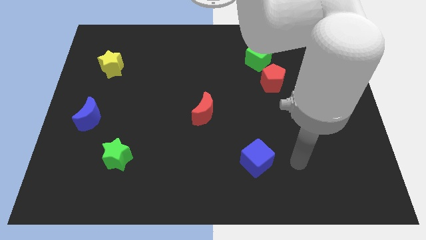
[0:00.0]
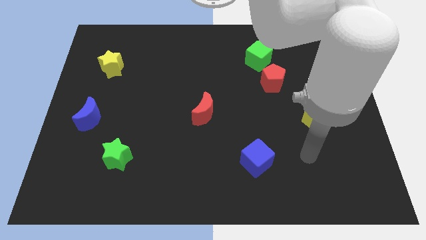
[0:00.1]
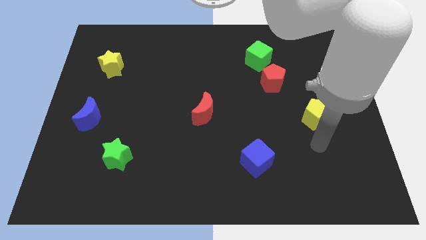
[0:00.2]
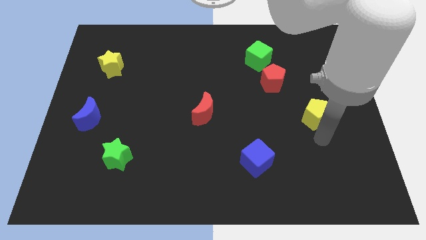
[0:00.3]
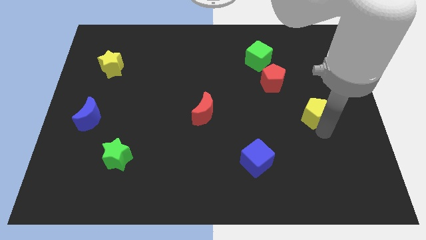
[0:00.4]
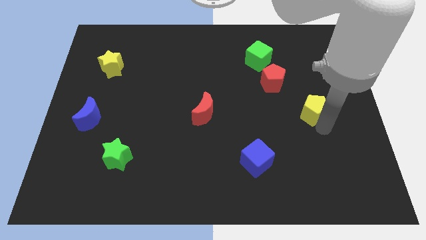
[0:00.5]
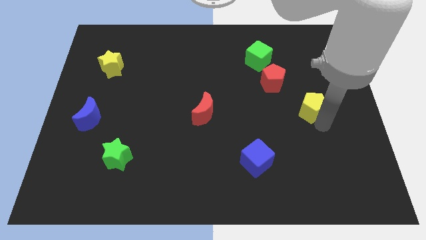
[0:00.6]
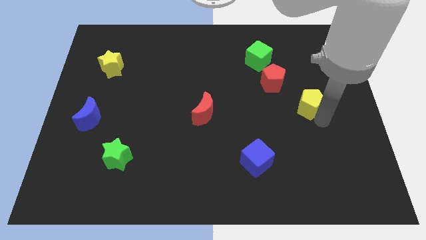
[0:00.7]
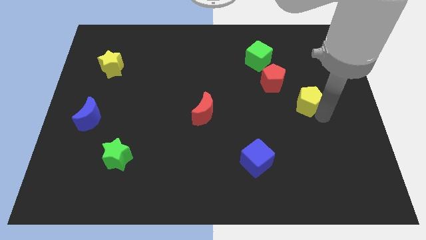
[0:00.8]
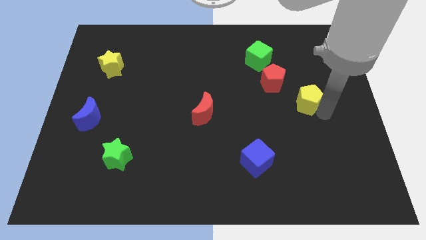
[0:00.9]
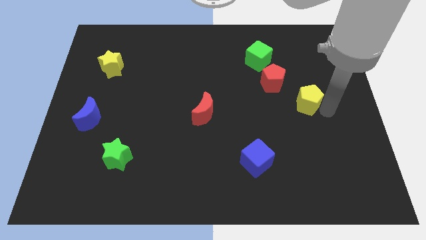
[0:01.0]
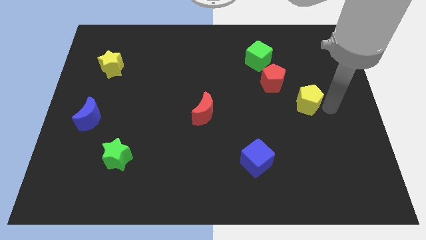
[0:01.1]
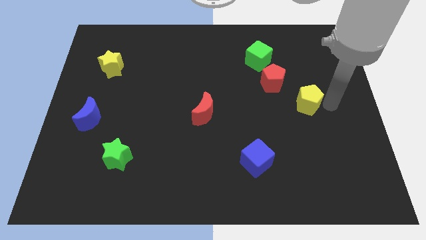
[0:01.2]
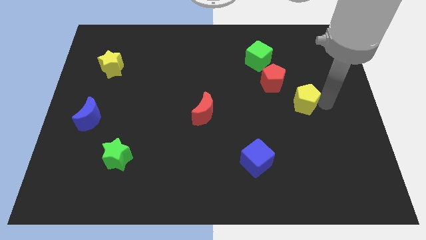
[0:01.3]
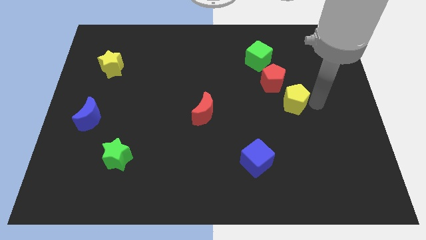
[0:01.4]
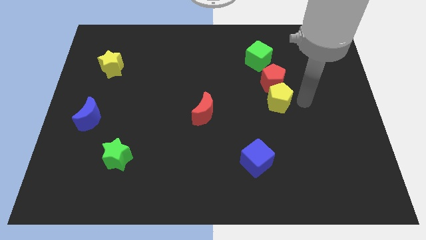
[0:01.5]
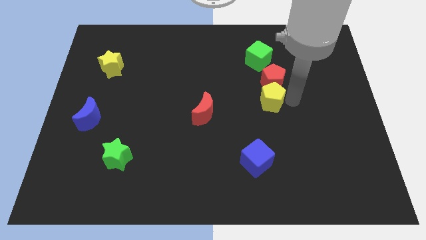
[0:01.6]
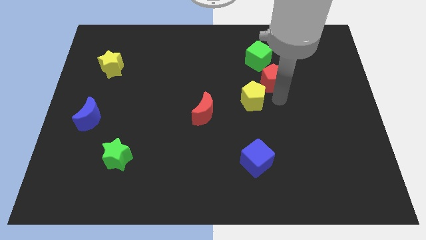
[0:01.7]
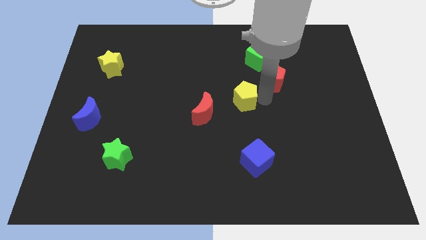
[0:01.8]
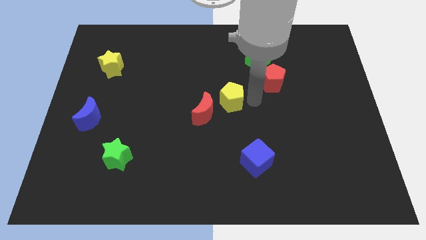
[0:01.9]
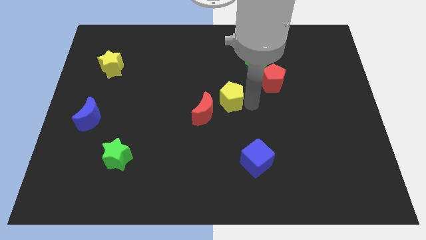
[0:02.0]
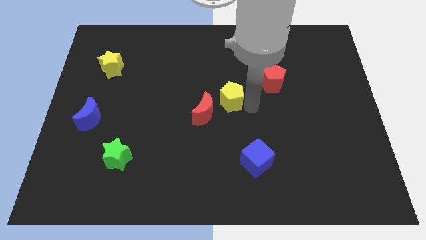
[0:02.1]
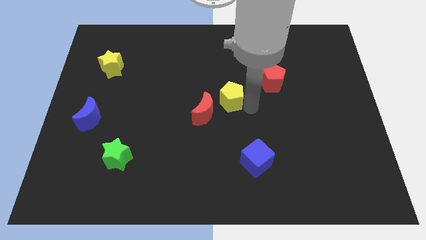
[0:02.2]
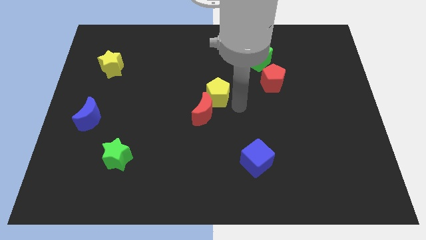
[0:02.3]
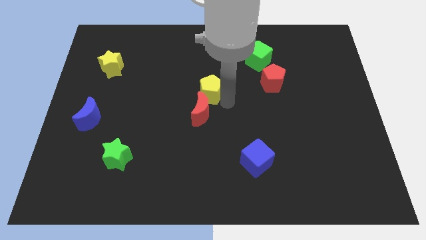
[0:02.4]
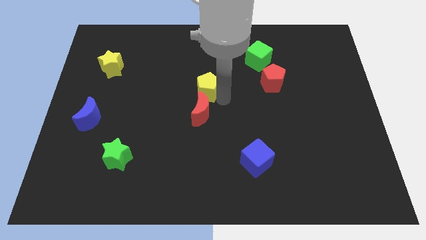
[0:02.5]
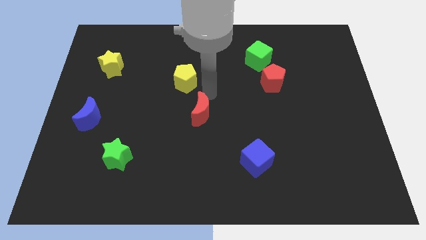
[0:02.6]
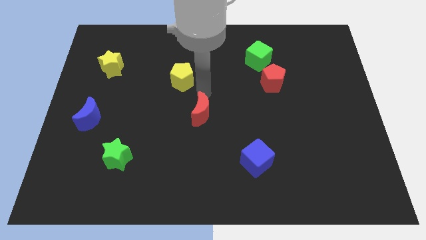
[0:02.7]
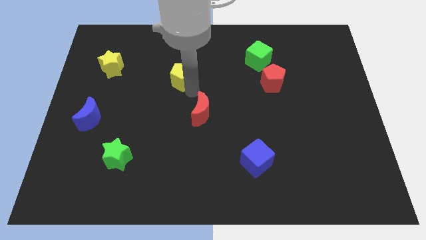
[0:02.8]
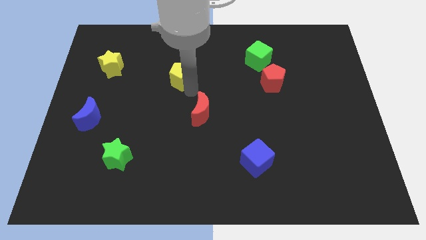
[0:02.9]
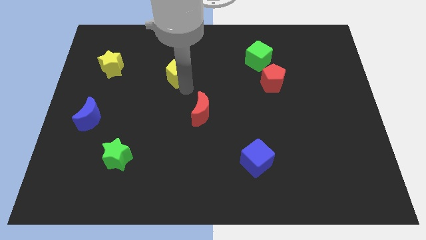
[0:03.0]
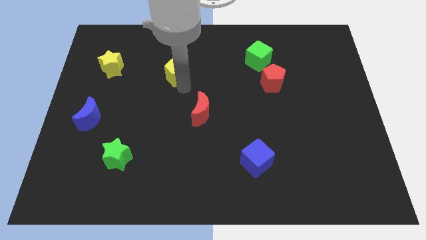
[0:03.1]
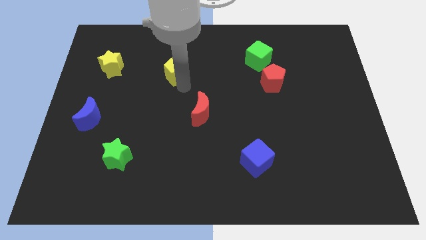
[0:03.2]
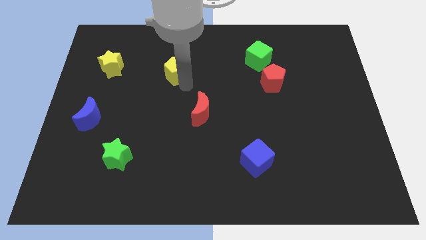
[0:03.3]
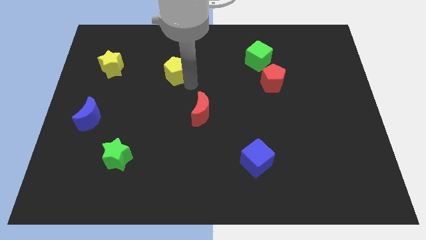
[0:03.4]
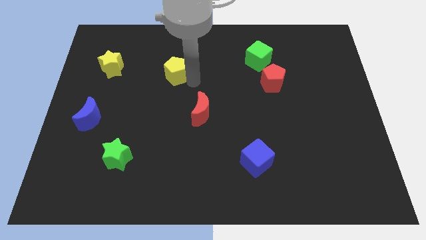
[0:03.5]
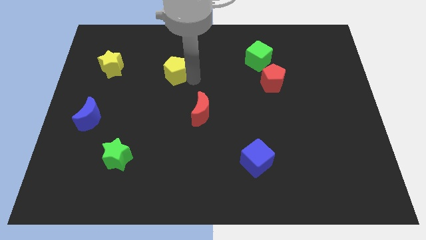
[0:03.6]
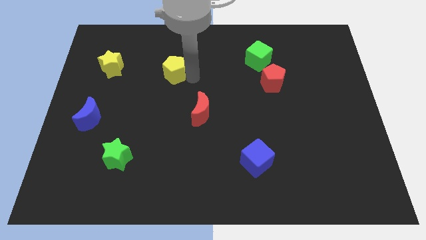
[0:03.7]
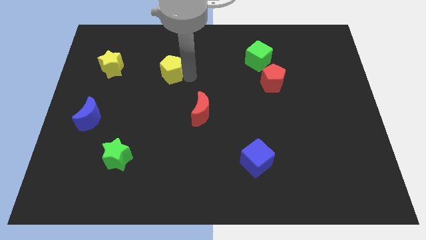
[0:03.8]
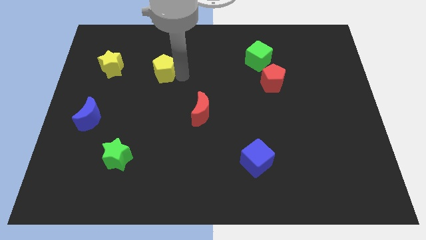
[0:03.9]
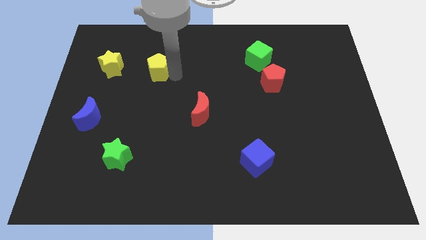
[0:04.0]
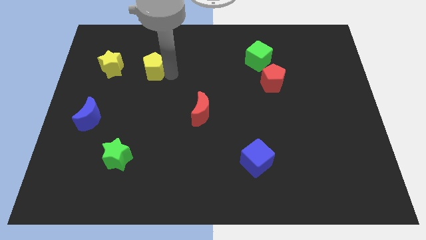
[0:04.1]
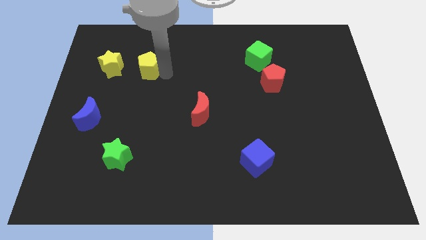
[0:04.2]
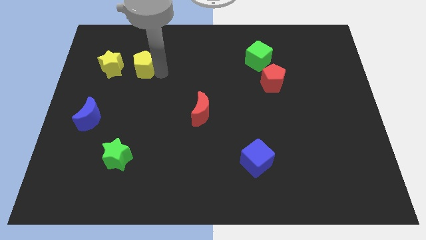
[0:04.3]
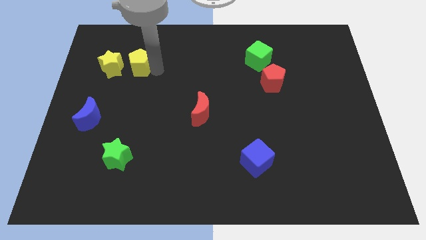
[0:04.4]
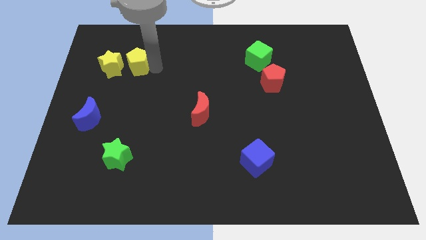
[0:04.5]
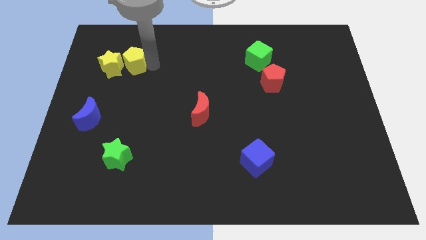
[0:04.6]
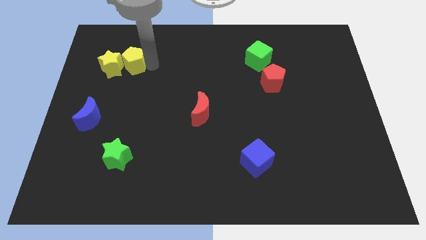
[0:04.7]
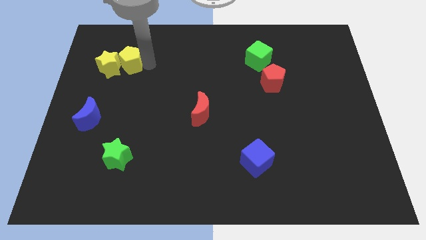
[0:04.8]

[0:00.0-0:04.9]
push the yellow pentagon towards the yellow star

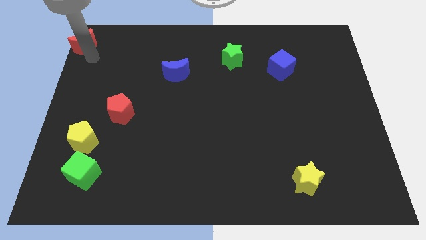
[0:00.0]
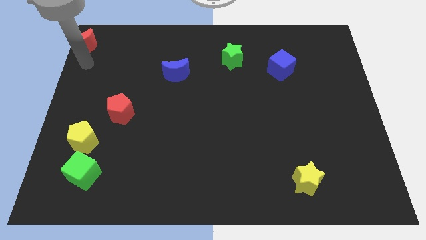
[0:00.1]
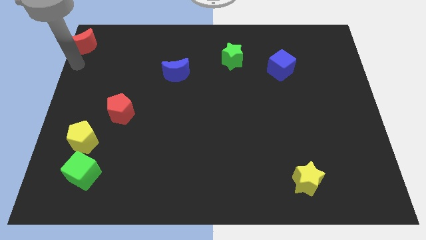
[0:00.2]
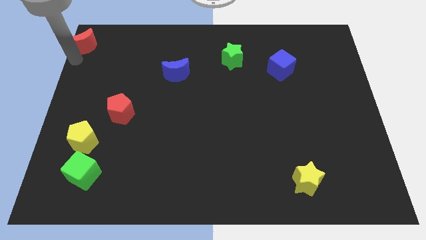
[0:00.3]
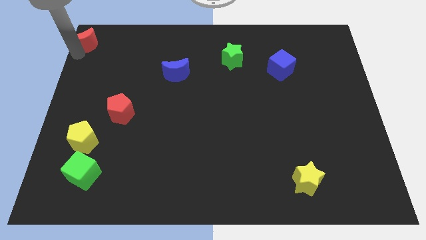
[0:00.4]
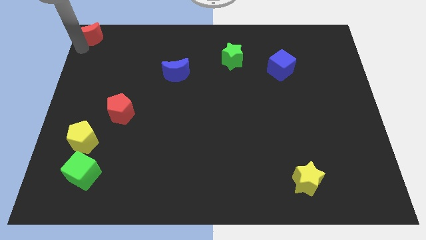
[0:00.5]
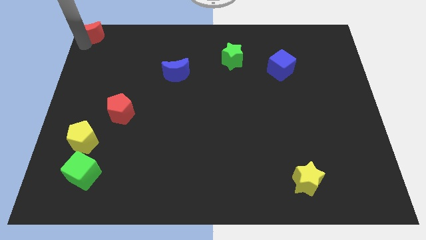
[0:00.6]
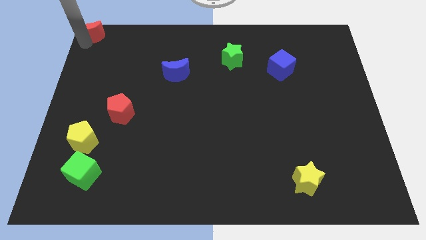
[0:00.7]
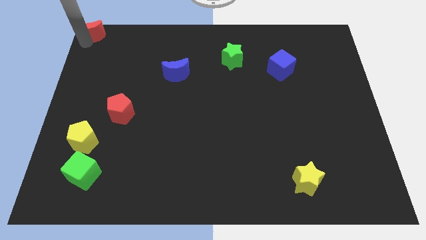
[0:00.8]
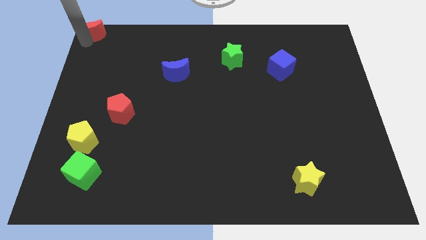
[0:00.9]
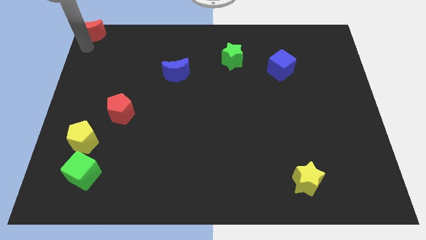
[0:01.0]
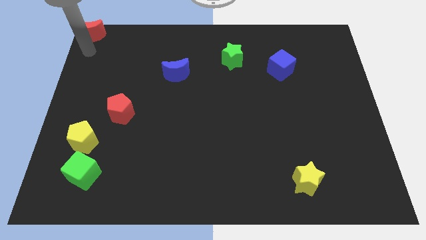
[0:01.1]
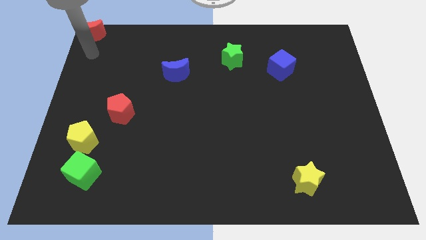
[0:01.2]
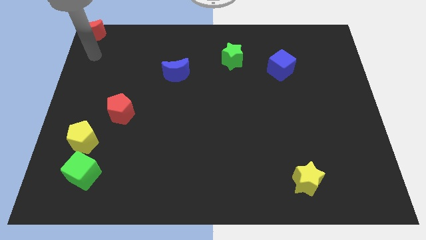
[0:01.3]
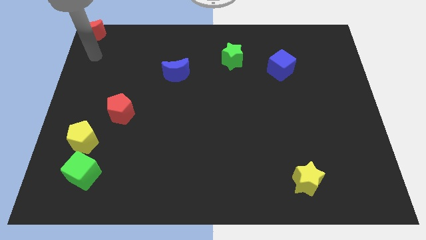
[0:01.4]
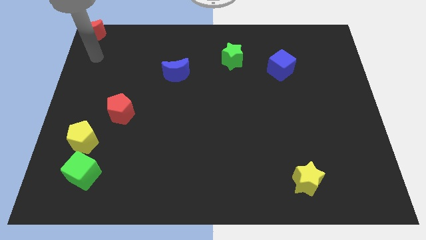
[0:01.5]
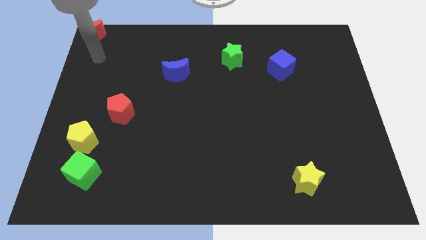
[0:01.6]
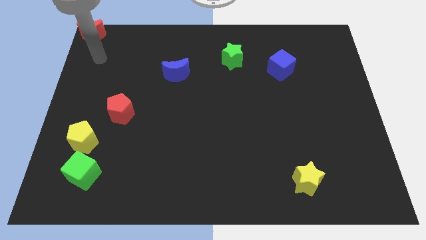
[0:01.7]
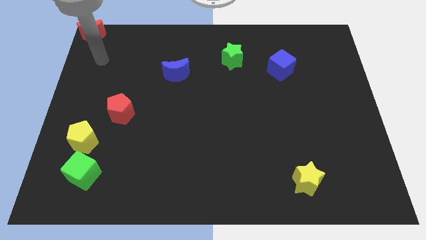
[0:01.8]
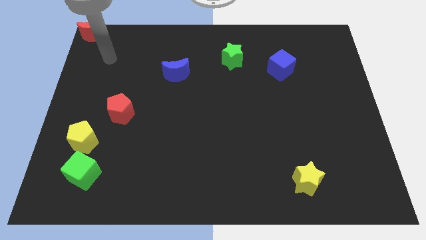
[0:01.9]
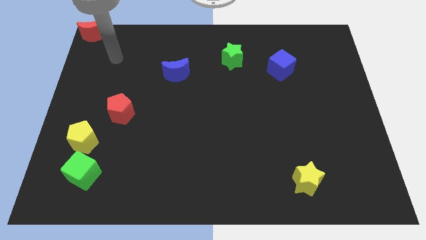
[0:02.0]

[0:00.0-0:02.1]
place red crescent to the top left corner

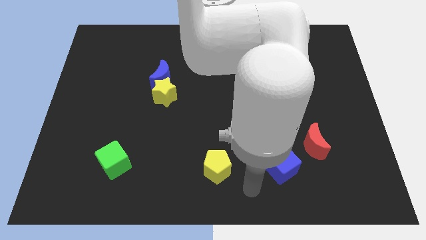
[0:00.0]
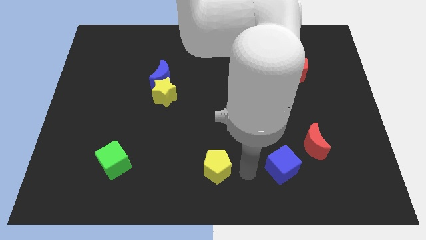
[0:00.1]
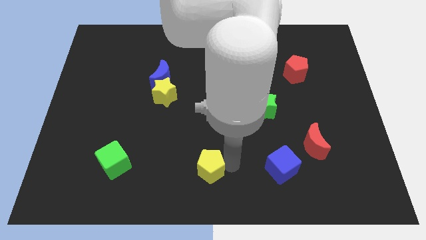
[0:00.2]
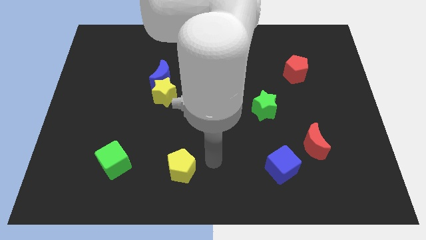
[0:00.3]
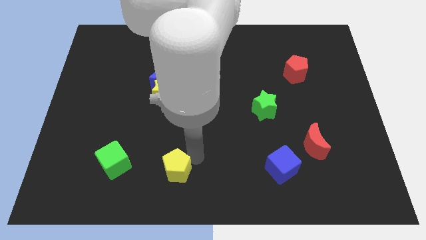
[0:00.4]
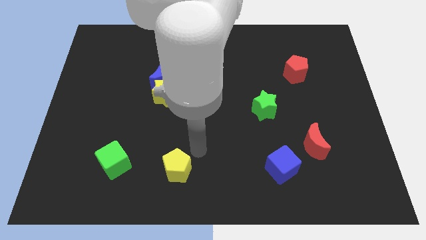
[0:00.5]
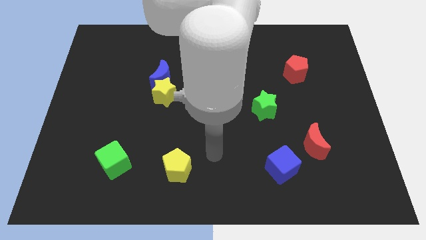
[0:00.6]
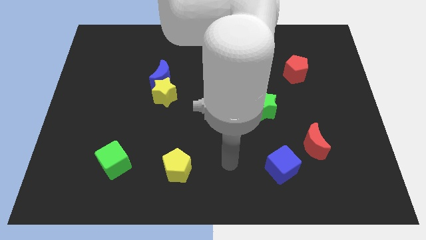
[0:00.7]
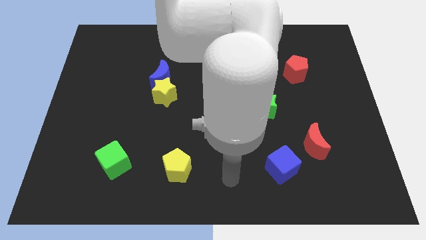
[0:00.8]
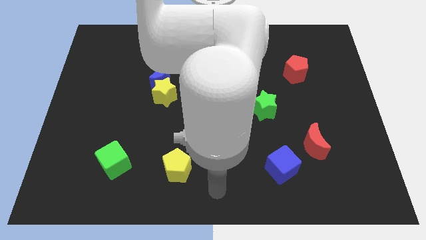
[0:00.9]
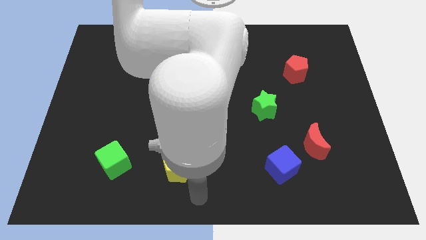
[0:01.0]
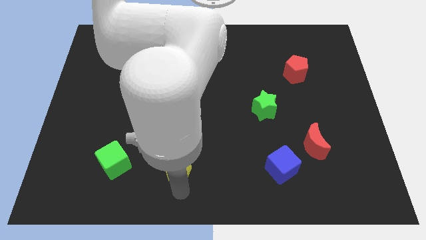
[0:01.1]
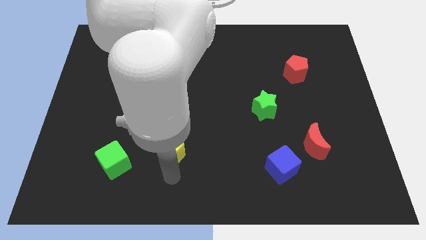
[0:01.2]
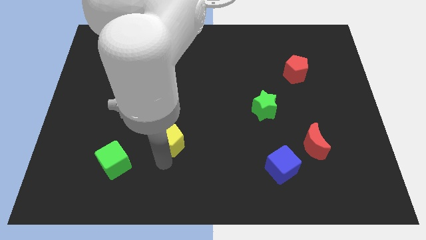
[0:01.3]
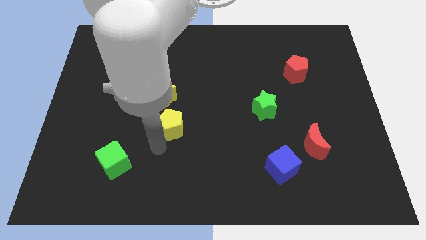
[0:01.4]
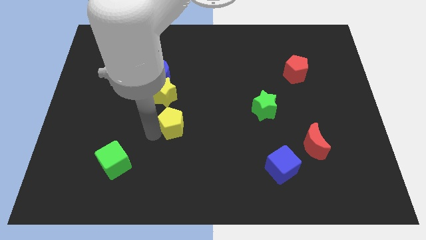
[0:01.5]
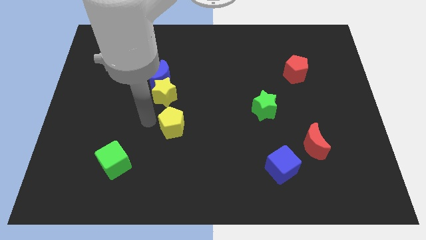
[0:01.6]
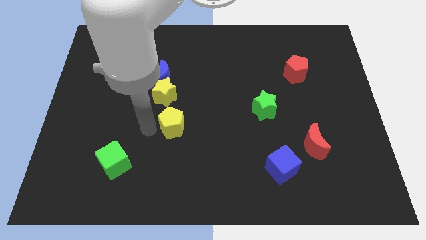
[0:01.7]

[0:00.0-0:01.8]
push yellow pentagon below the yellow star

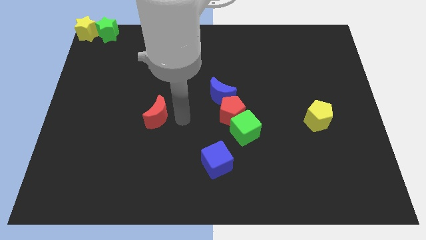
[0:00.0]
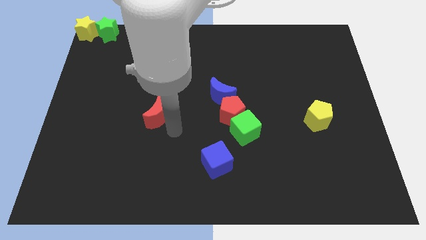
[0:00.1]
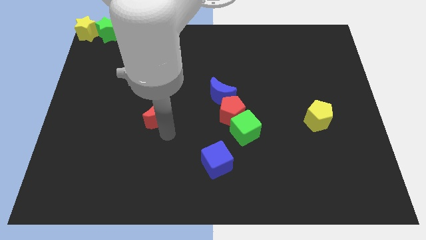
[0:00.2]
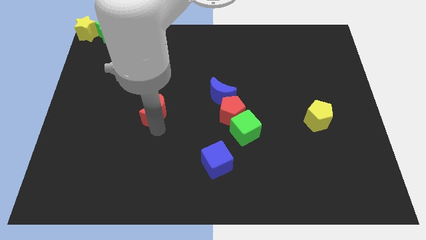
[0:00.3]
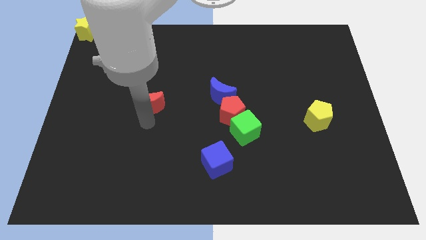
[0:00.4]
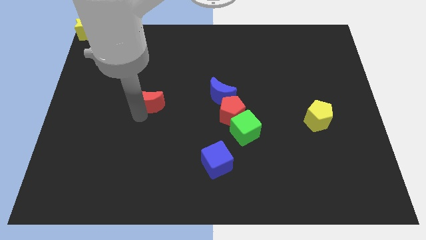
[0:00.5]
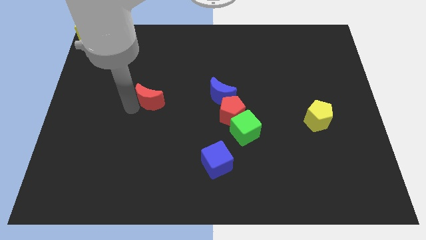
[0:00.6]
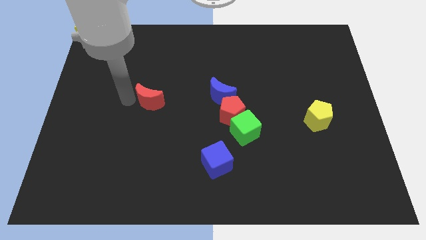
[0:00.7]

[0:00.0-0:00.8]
touch the left of the red moon
